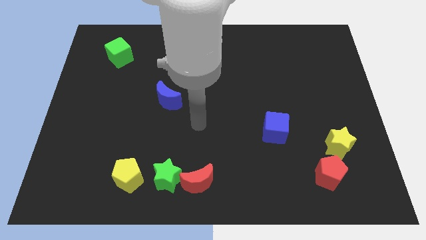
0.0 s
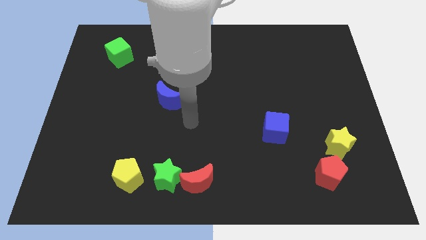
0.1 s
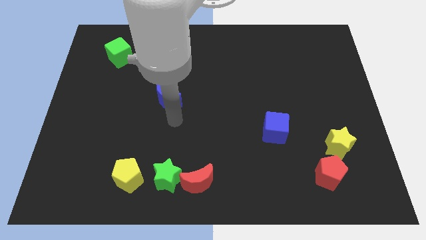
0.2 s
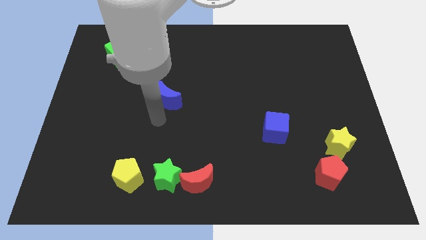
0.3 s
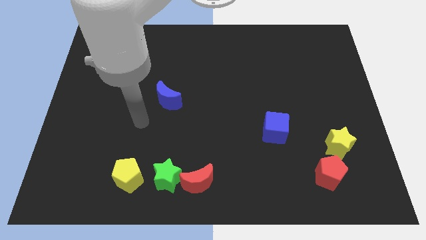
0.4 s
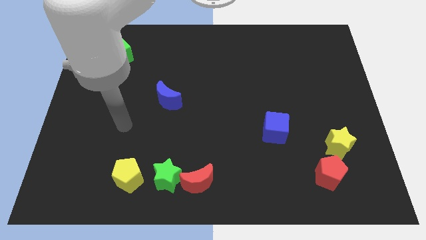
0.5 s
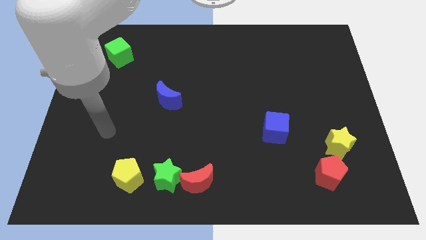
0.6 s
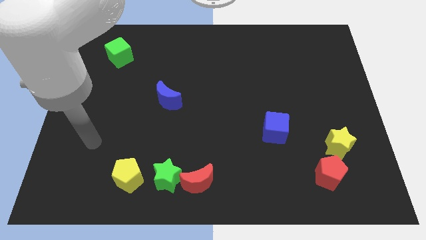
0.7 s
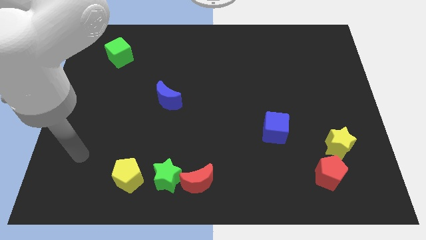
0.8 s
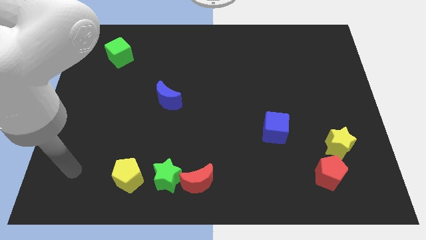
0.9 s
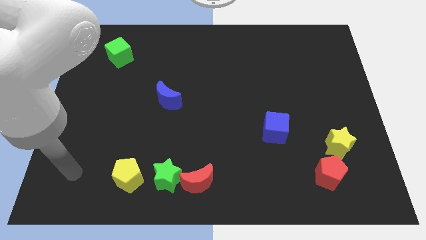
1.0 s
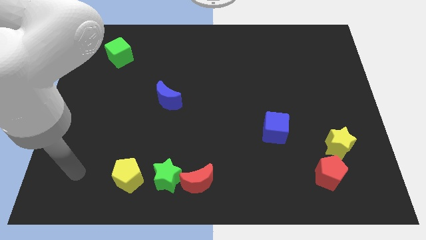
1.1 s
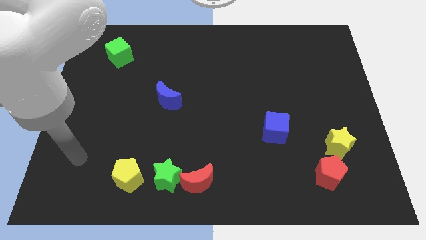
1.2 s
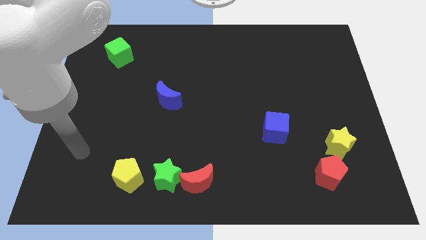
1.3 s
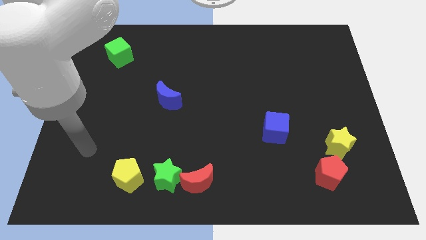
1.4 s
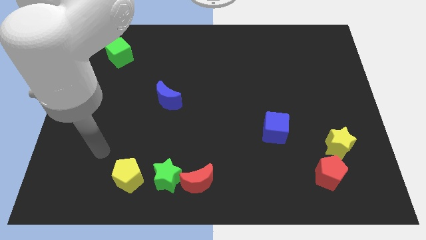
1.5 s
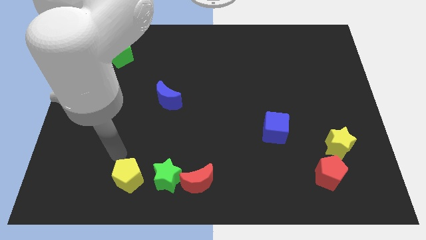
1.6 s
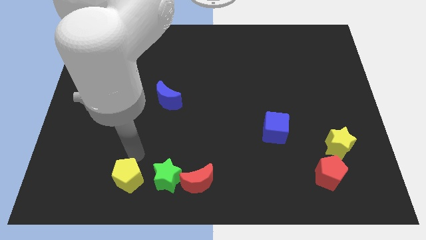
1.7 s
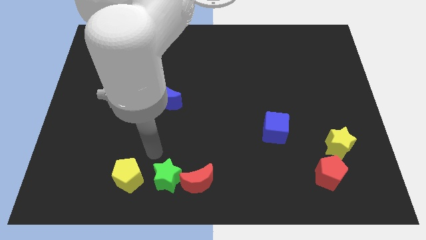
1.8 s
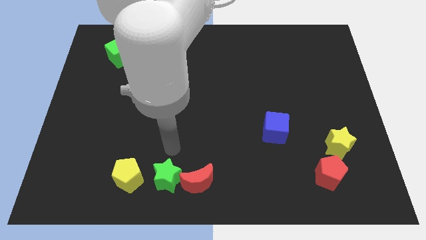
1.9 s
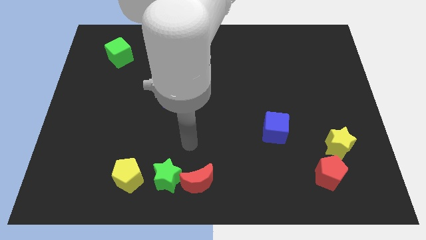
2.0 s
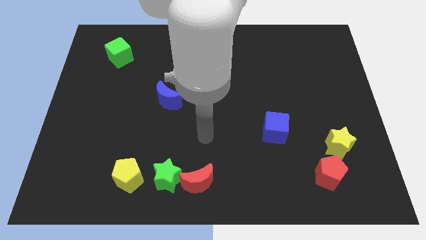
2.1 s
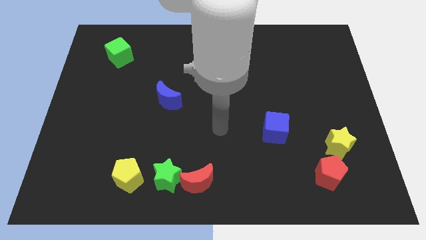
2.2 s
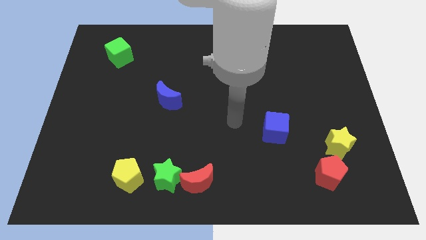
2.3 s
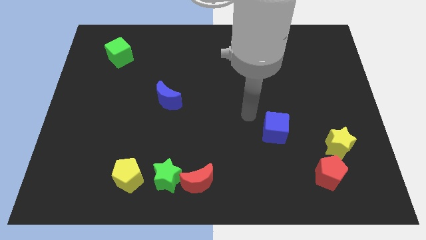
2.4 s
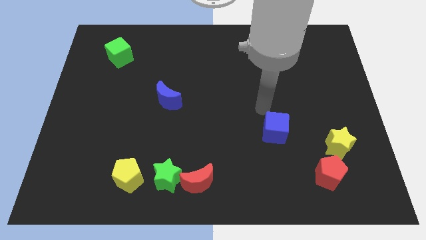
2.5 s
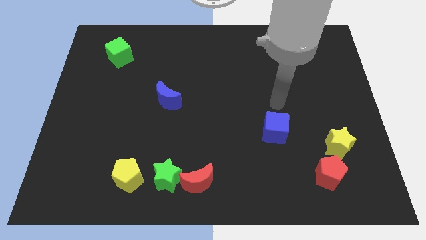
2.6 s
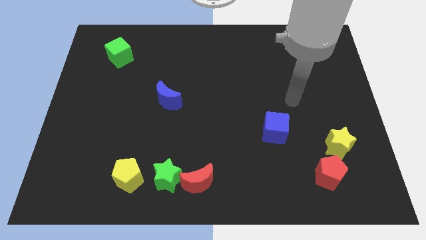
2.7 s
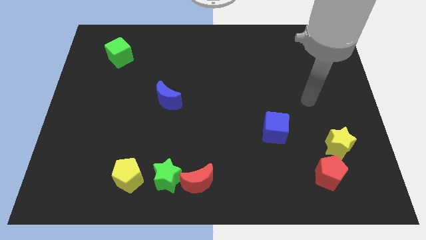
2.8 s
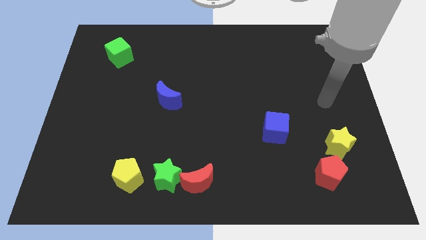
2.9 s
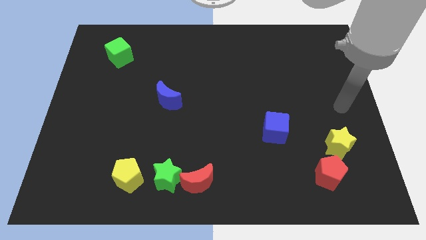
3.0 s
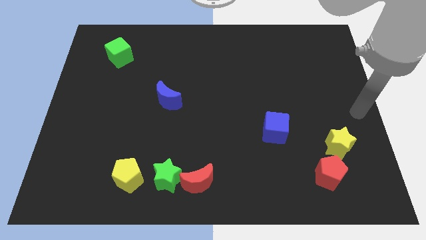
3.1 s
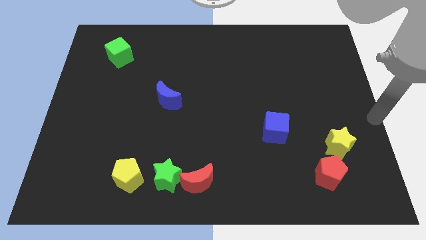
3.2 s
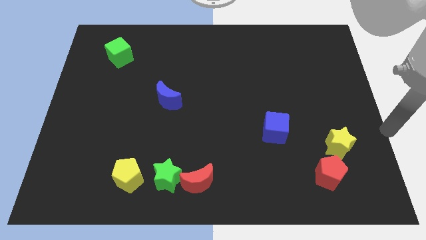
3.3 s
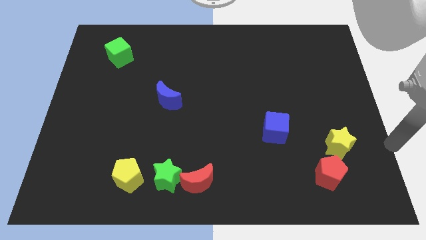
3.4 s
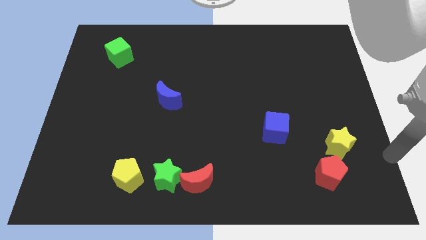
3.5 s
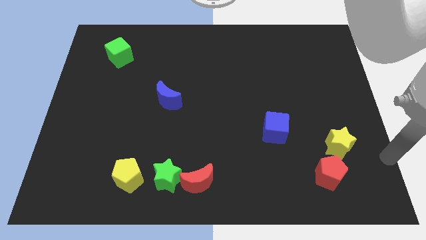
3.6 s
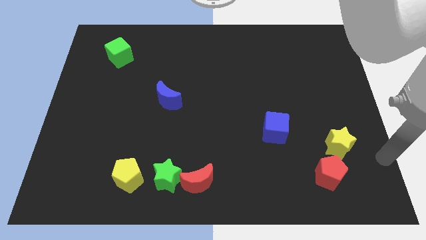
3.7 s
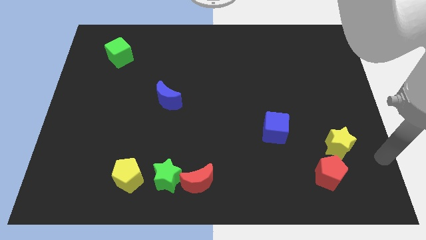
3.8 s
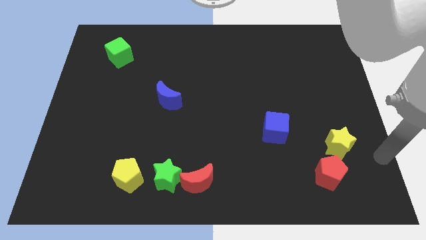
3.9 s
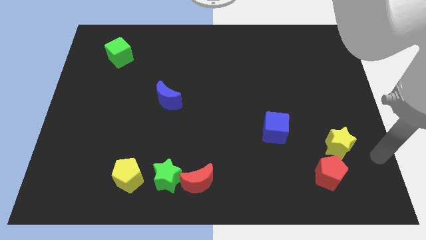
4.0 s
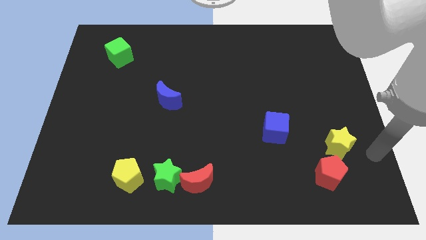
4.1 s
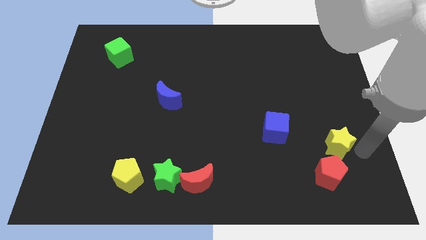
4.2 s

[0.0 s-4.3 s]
place your arm right to the yellow star

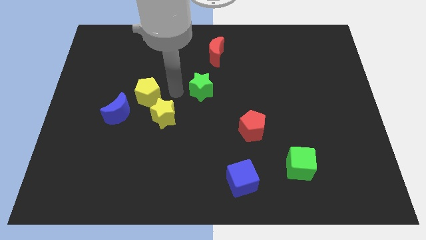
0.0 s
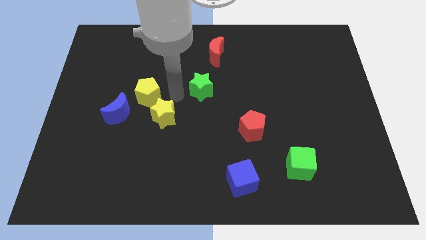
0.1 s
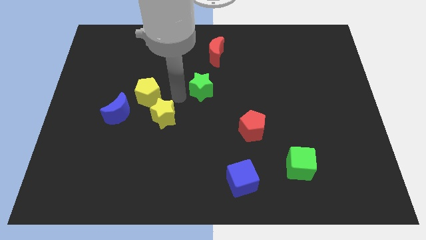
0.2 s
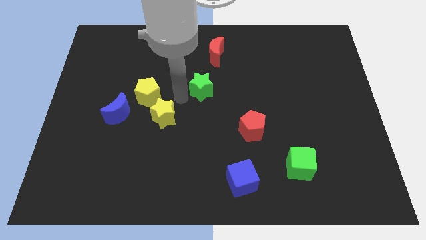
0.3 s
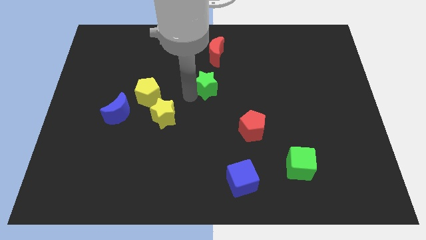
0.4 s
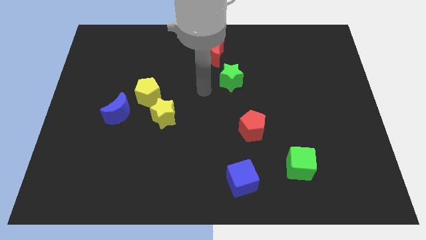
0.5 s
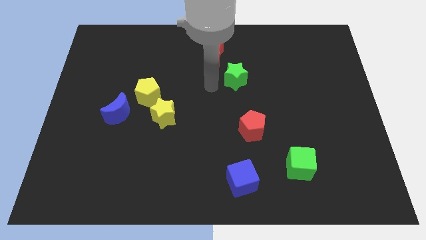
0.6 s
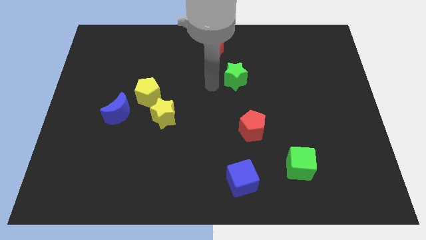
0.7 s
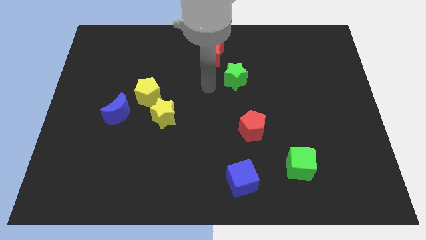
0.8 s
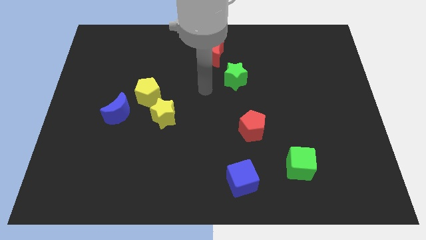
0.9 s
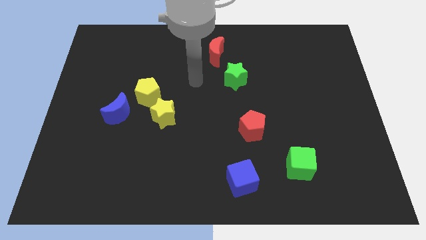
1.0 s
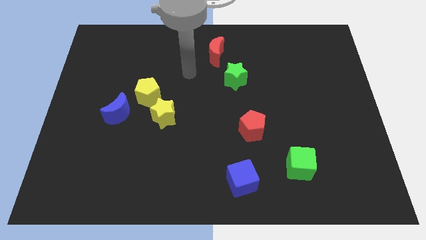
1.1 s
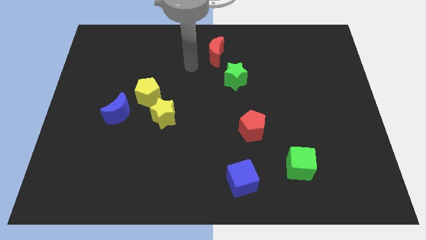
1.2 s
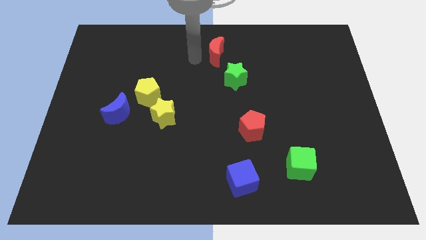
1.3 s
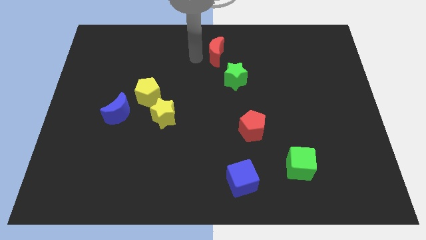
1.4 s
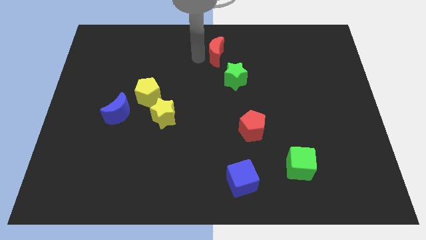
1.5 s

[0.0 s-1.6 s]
push the green star to the bottom right of the red crescent

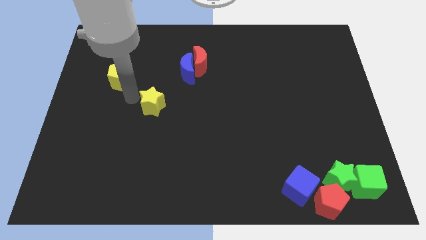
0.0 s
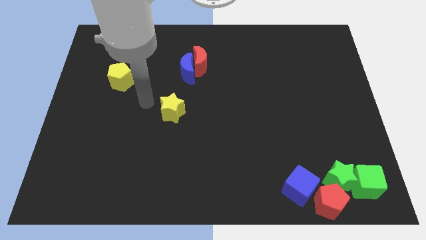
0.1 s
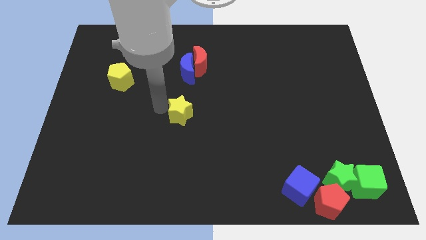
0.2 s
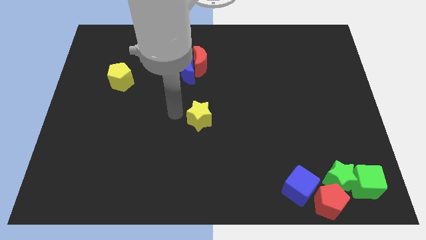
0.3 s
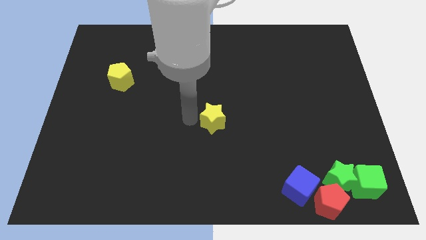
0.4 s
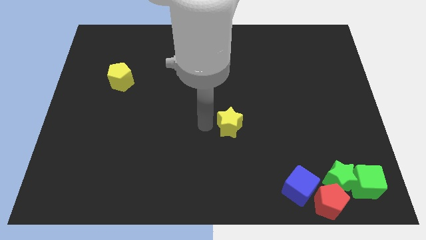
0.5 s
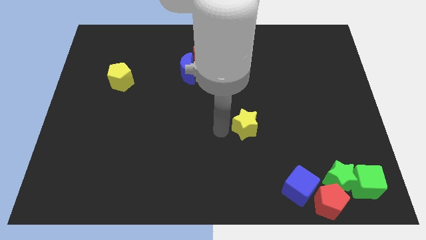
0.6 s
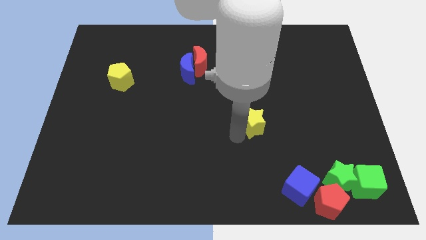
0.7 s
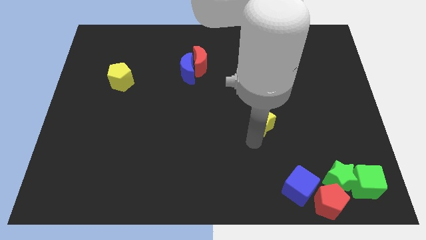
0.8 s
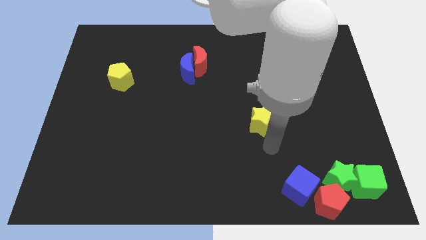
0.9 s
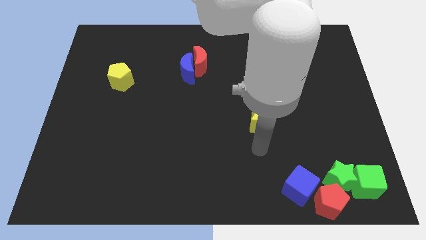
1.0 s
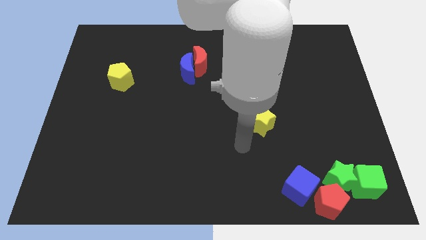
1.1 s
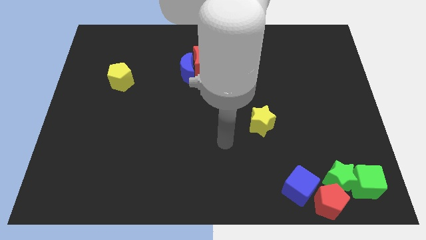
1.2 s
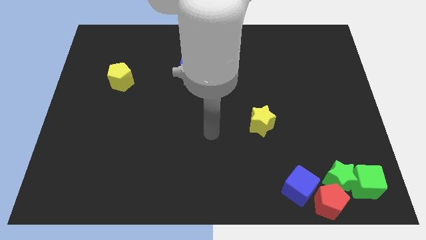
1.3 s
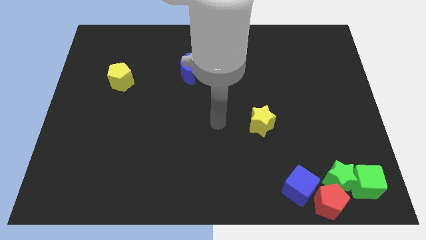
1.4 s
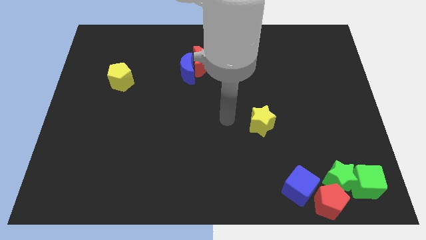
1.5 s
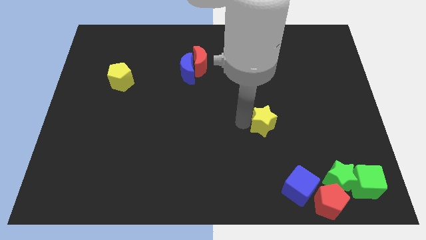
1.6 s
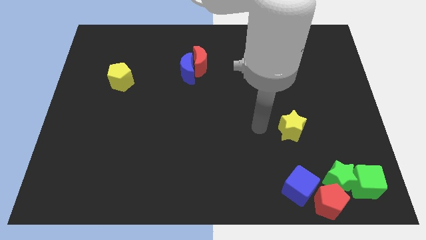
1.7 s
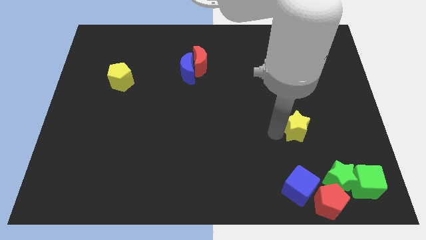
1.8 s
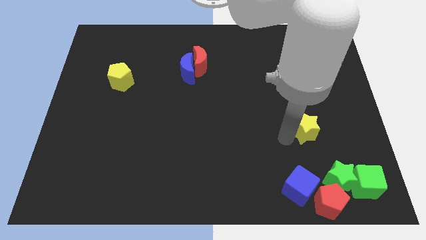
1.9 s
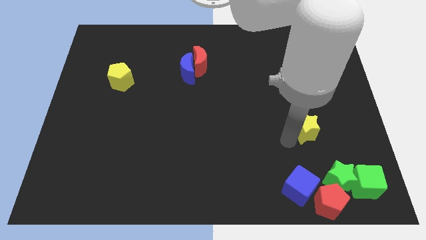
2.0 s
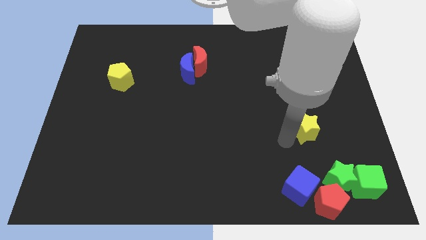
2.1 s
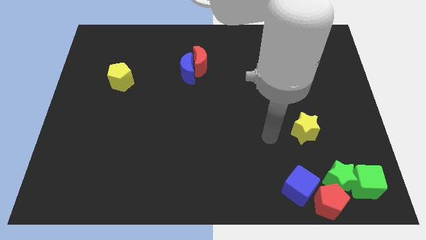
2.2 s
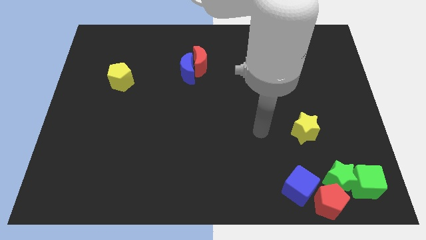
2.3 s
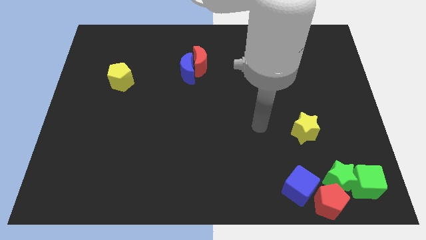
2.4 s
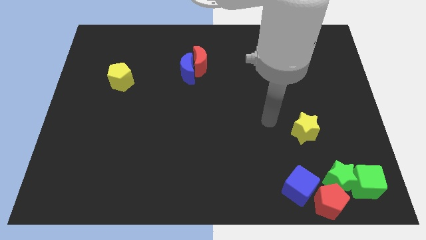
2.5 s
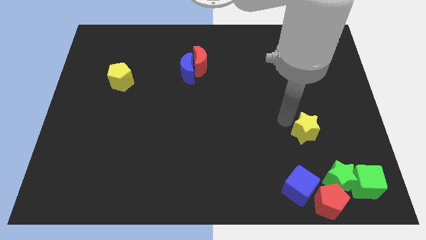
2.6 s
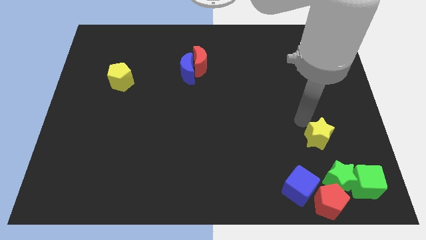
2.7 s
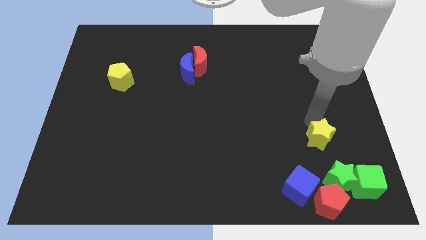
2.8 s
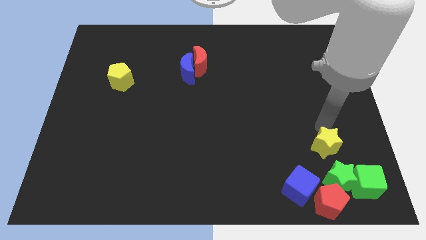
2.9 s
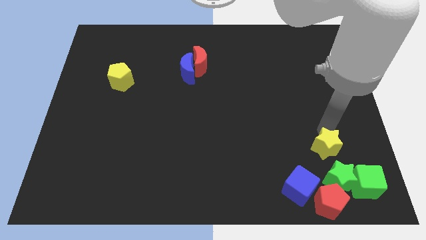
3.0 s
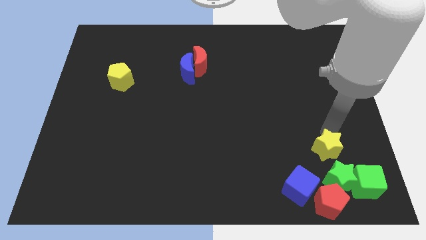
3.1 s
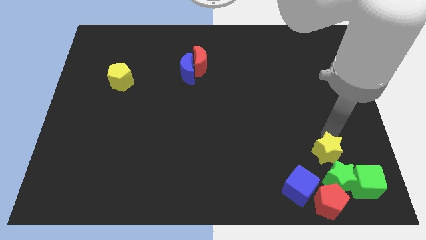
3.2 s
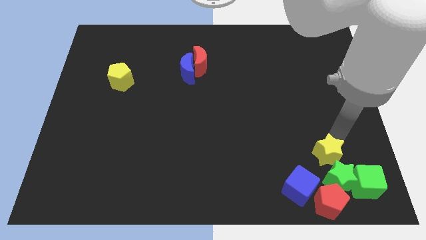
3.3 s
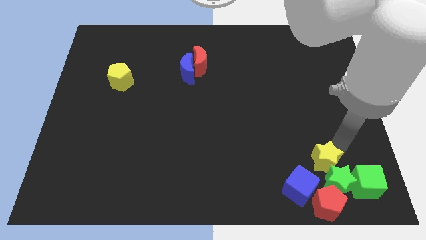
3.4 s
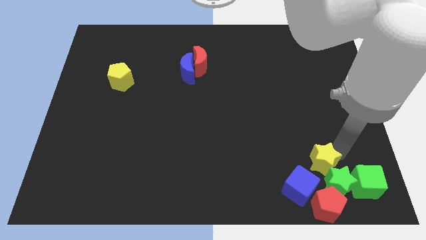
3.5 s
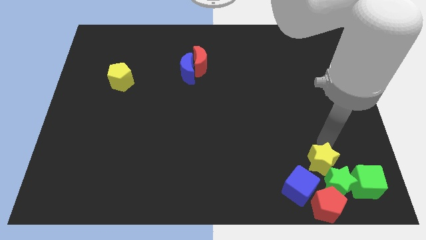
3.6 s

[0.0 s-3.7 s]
move the yellow star close to the green star
